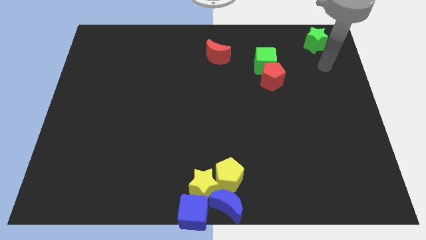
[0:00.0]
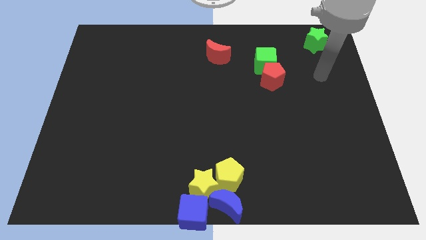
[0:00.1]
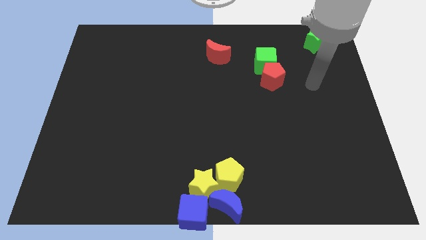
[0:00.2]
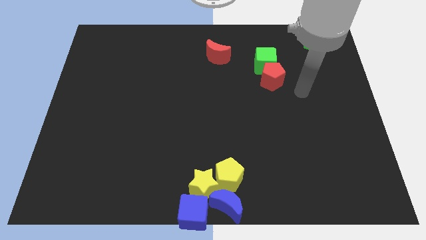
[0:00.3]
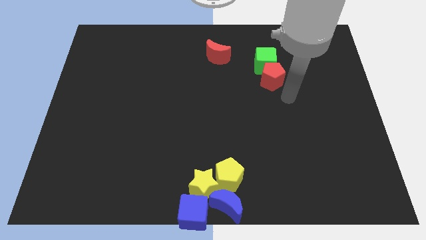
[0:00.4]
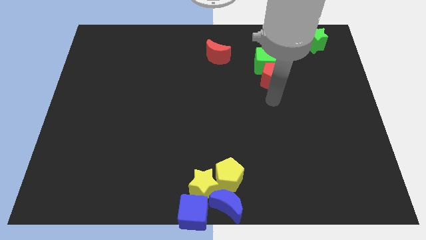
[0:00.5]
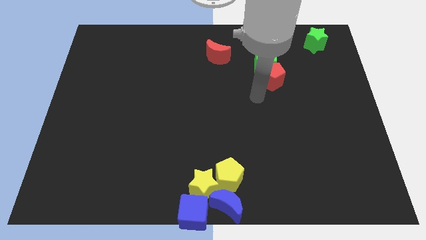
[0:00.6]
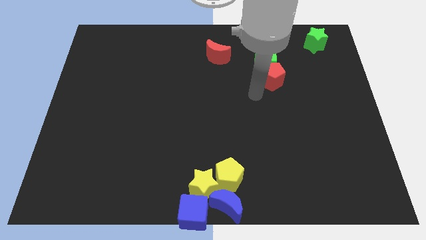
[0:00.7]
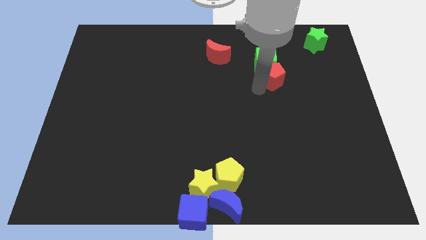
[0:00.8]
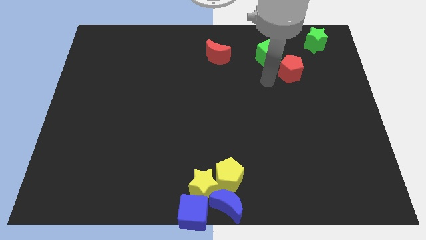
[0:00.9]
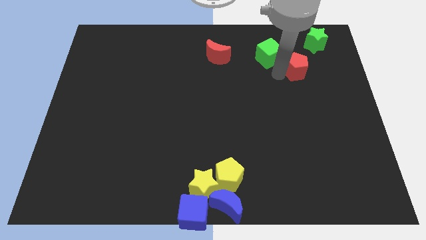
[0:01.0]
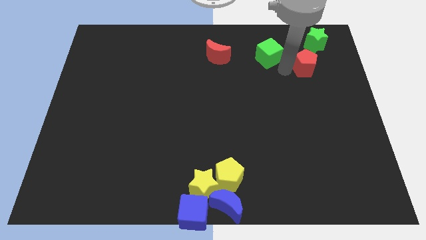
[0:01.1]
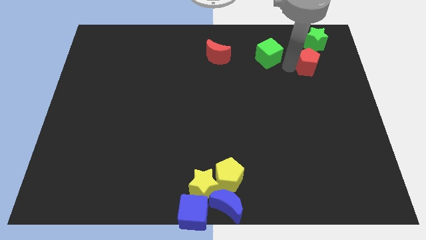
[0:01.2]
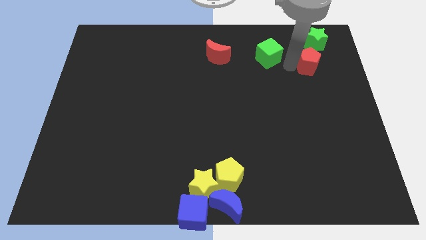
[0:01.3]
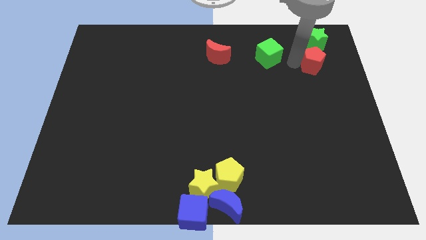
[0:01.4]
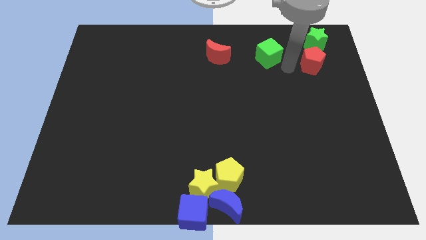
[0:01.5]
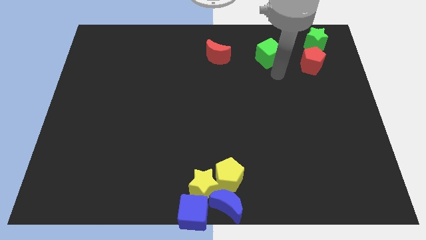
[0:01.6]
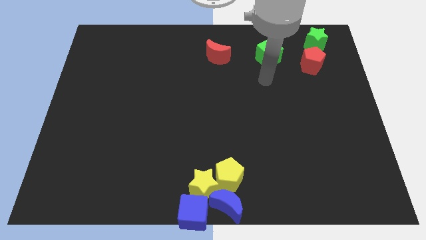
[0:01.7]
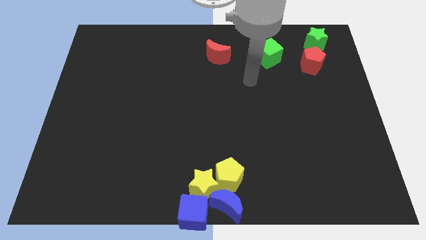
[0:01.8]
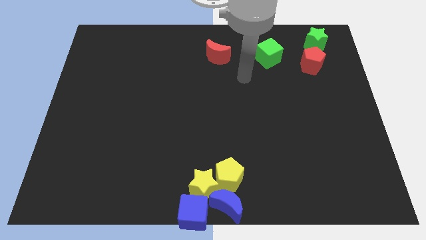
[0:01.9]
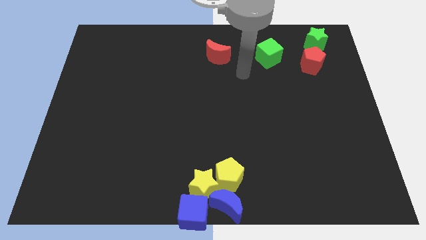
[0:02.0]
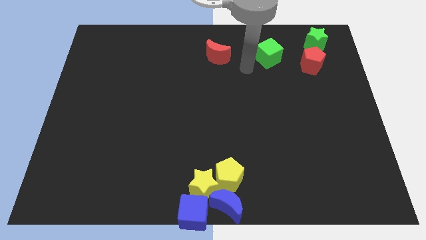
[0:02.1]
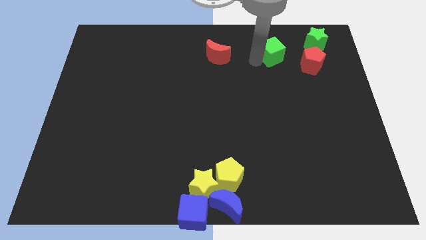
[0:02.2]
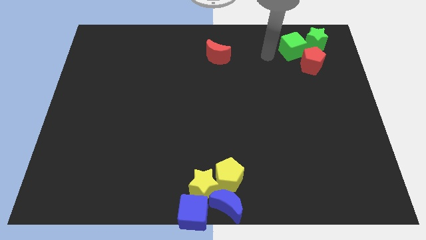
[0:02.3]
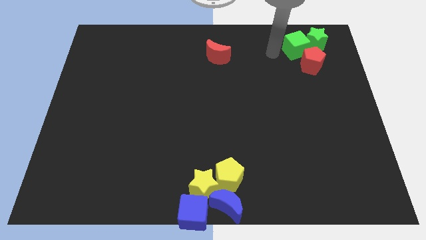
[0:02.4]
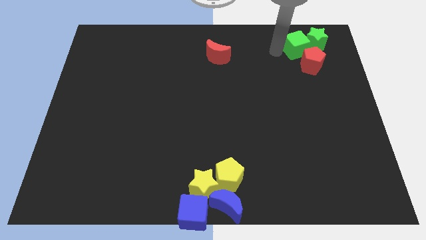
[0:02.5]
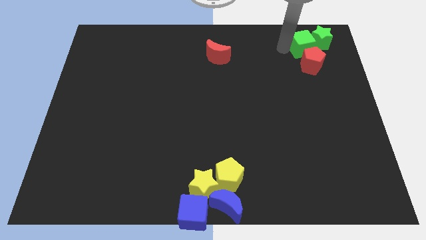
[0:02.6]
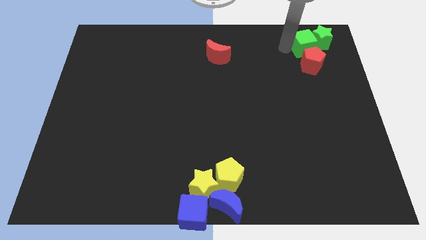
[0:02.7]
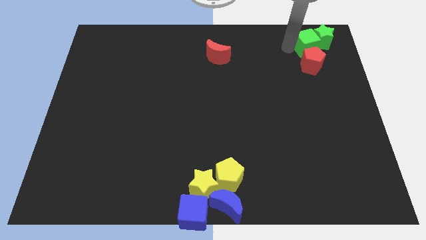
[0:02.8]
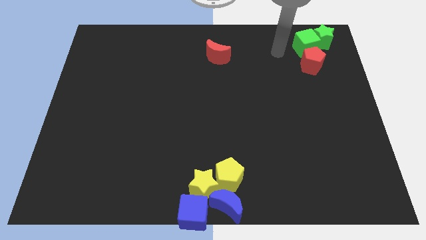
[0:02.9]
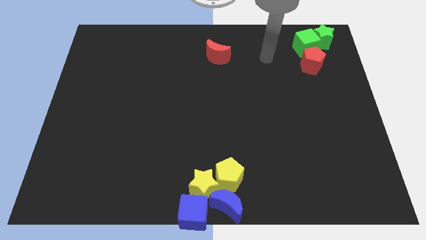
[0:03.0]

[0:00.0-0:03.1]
push the red pentagon and green cube into the green star diagonally

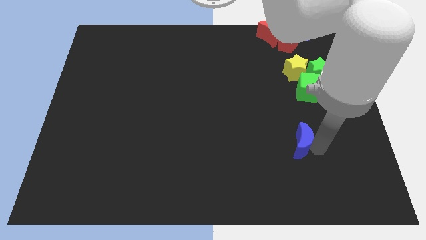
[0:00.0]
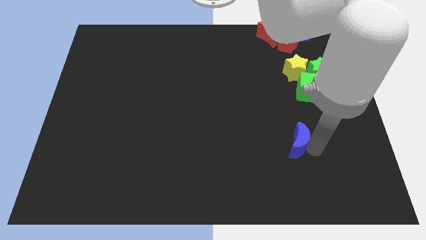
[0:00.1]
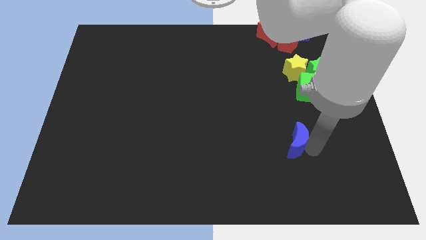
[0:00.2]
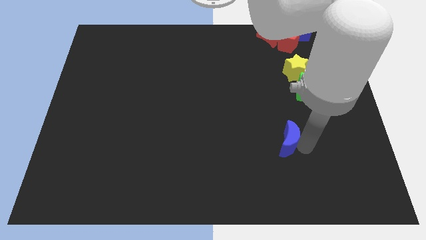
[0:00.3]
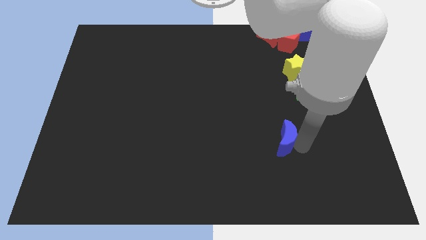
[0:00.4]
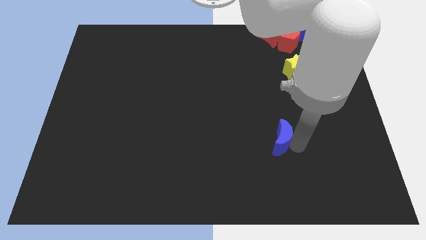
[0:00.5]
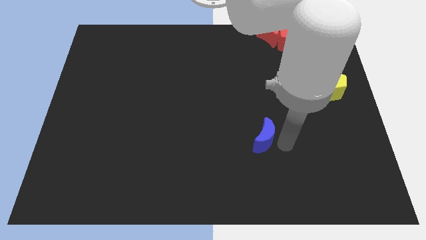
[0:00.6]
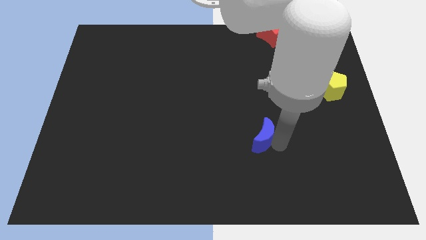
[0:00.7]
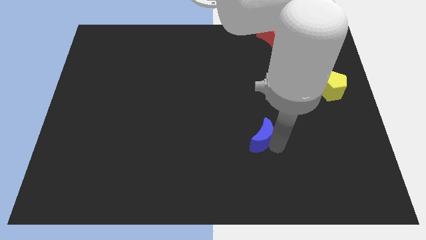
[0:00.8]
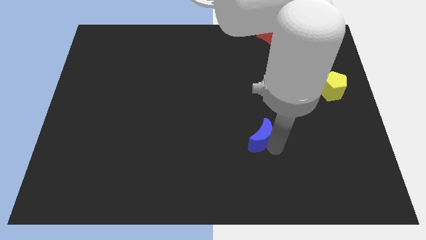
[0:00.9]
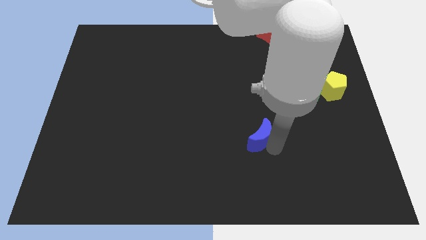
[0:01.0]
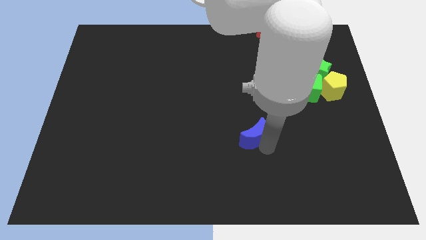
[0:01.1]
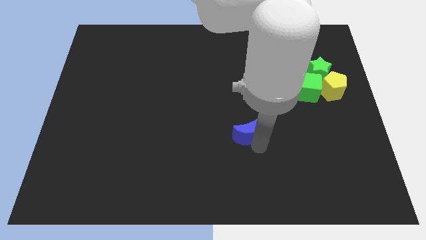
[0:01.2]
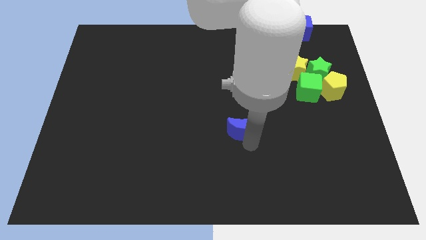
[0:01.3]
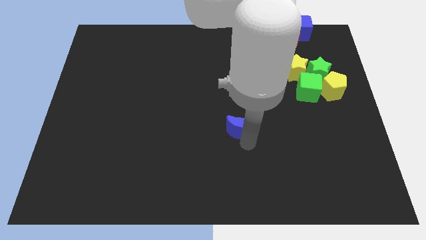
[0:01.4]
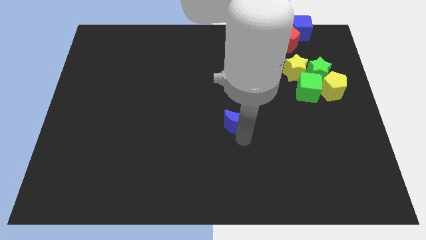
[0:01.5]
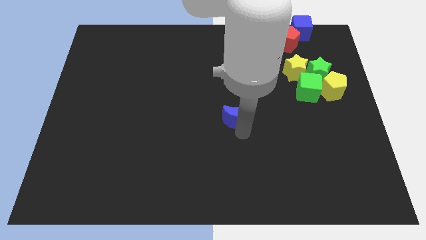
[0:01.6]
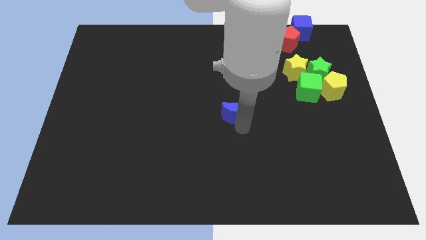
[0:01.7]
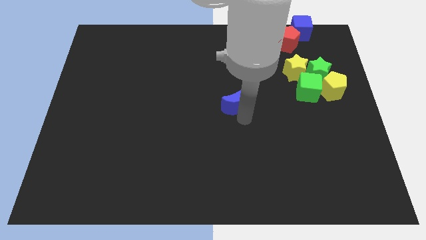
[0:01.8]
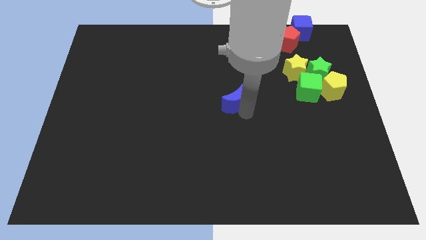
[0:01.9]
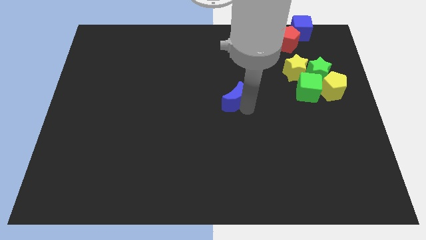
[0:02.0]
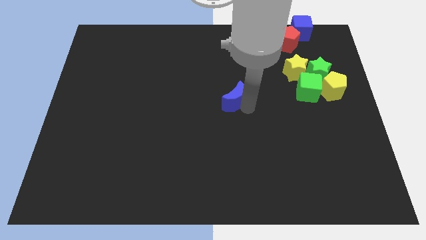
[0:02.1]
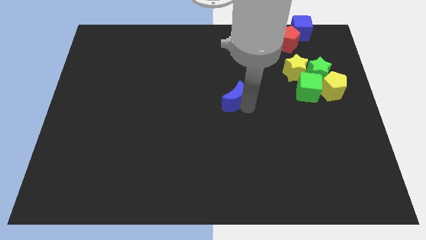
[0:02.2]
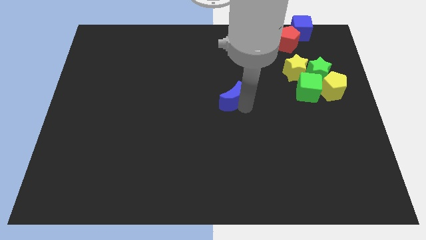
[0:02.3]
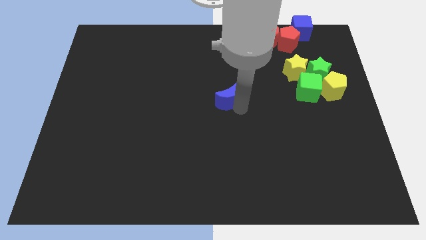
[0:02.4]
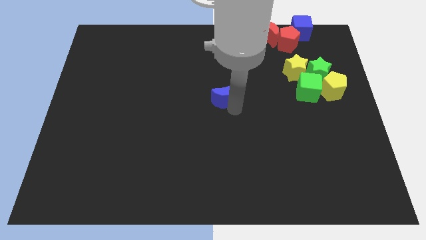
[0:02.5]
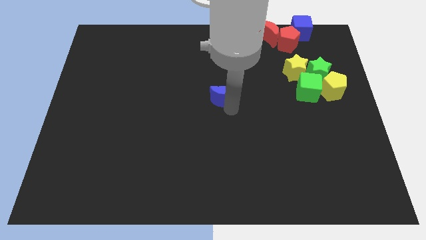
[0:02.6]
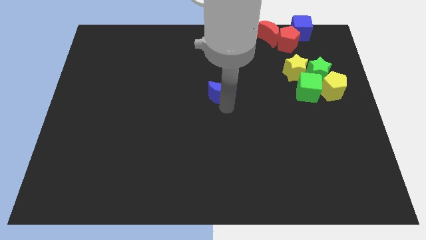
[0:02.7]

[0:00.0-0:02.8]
move the blue moon to the left side of the green

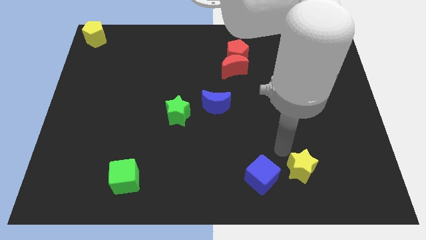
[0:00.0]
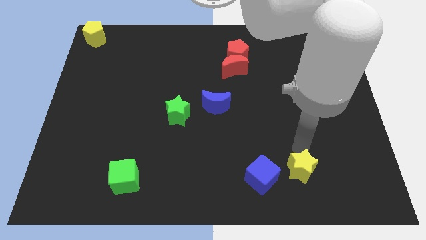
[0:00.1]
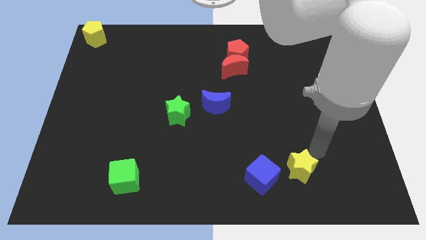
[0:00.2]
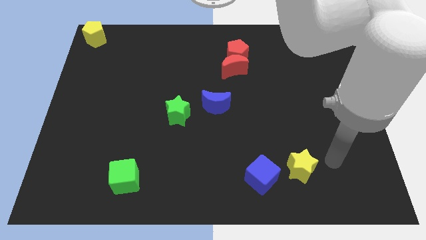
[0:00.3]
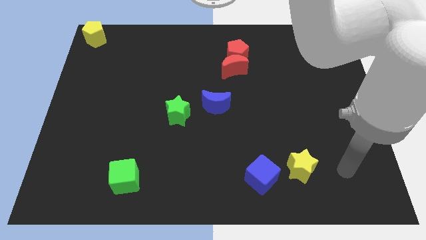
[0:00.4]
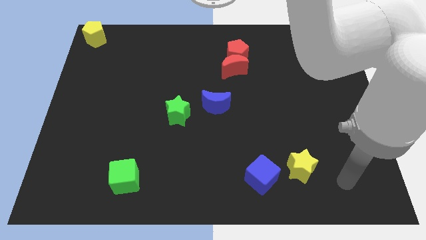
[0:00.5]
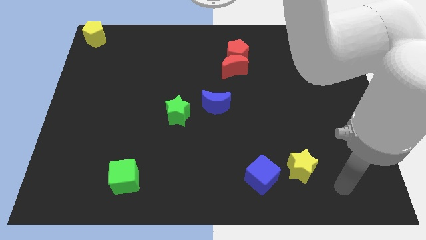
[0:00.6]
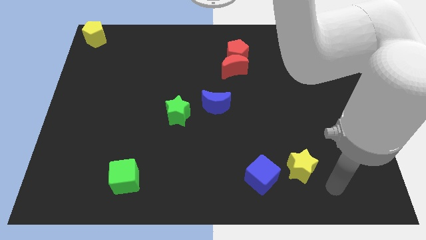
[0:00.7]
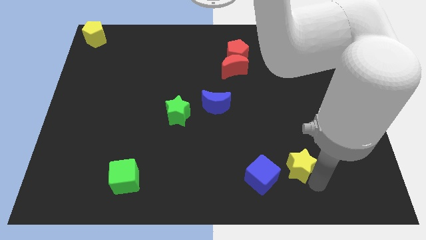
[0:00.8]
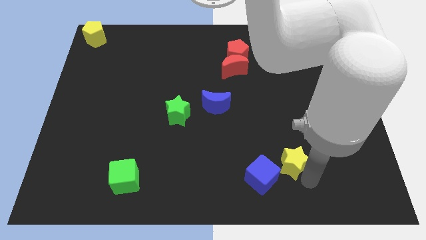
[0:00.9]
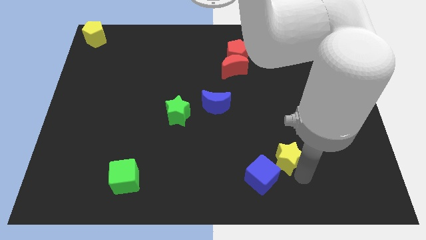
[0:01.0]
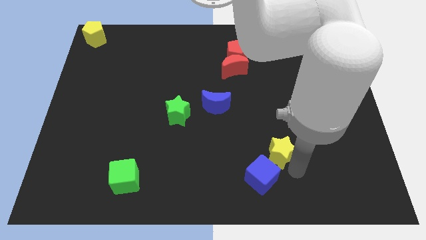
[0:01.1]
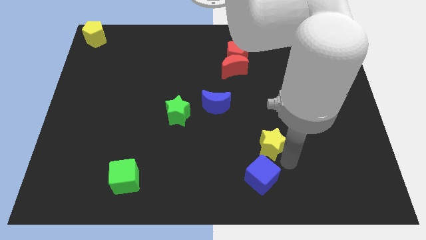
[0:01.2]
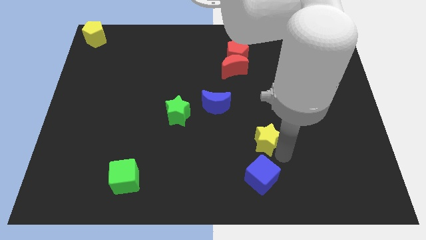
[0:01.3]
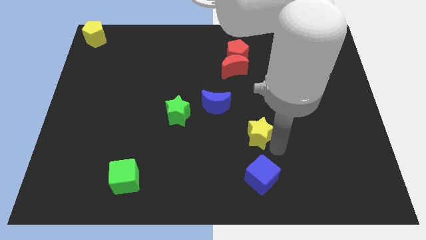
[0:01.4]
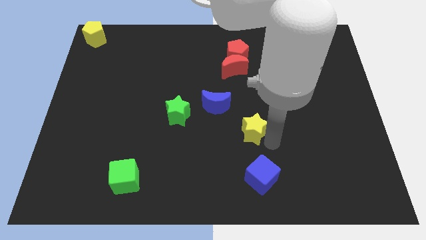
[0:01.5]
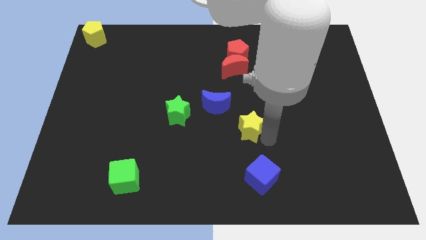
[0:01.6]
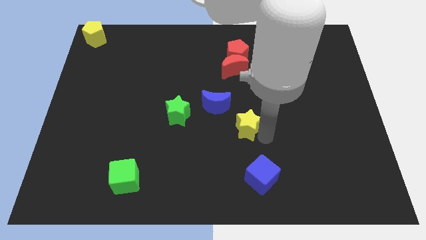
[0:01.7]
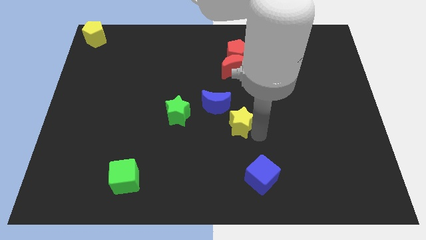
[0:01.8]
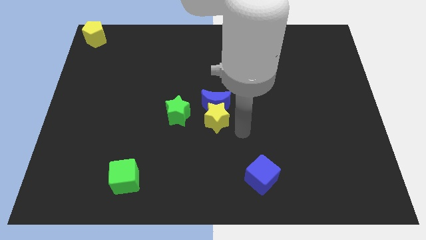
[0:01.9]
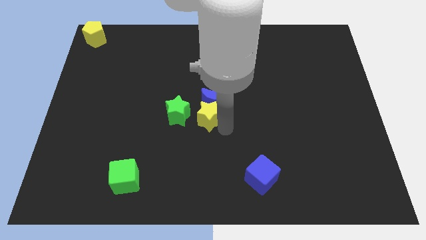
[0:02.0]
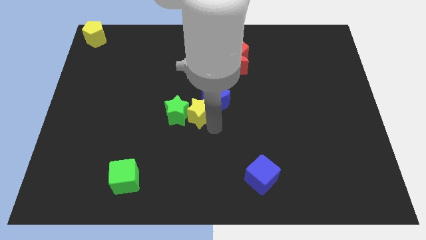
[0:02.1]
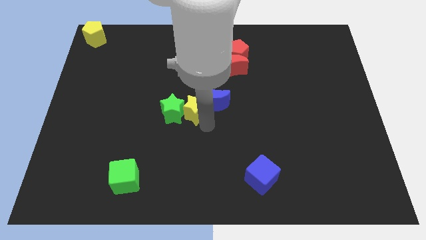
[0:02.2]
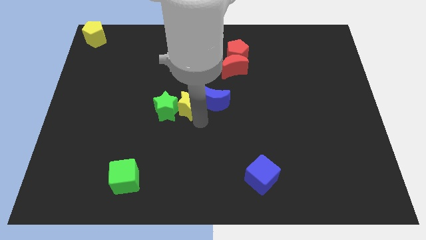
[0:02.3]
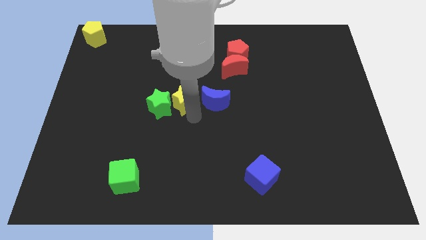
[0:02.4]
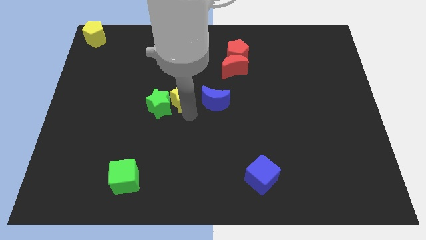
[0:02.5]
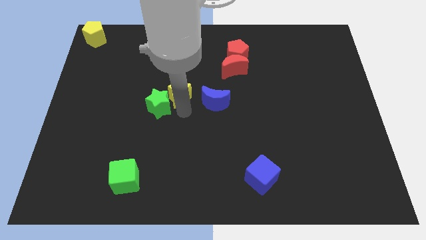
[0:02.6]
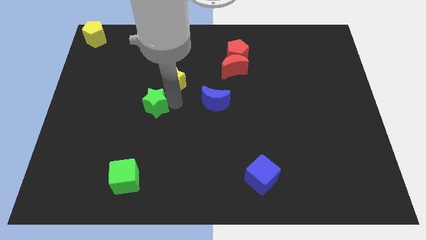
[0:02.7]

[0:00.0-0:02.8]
push the yellow star into green star

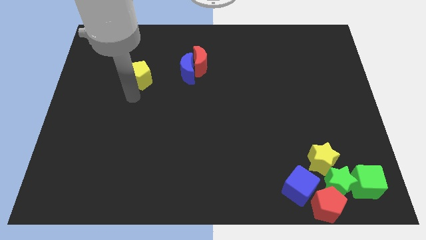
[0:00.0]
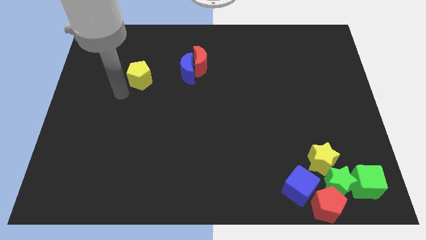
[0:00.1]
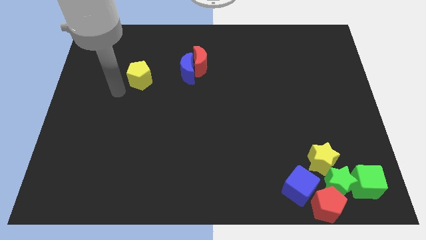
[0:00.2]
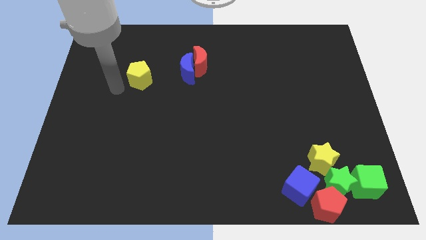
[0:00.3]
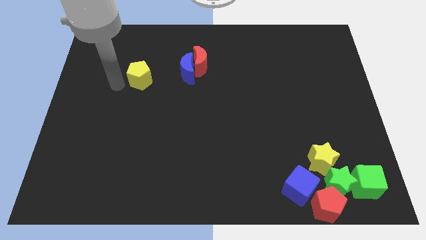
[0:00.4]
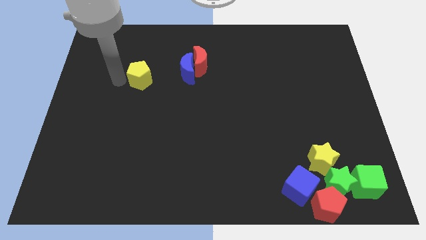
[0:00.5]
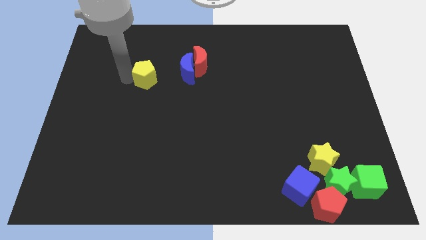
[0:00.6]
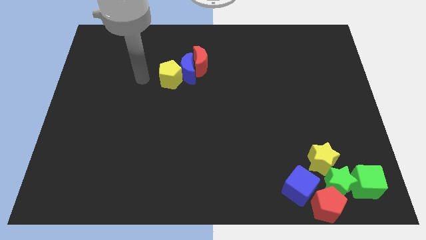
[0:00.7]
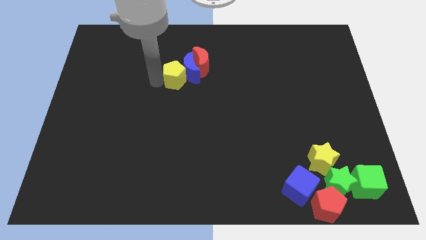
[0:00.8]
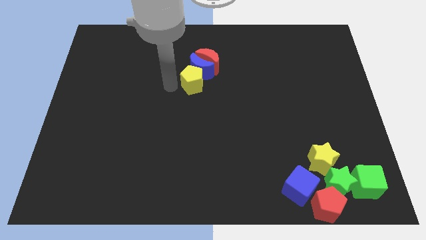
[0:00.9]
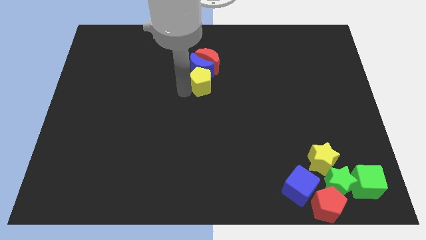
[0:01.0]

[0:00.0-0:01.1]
place the yellow pentagon below the blue crescent
